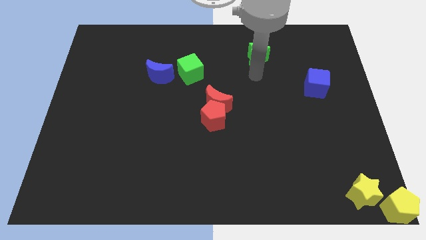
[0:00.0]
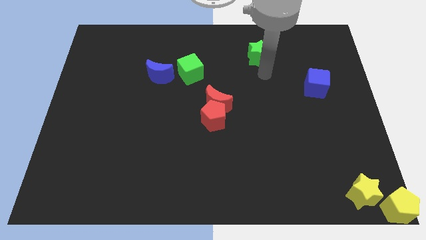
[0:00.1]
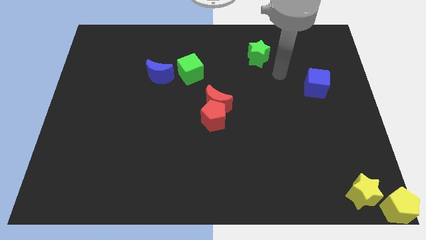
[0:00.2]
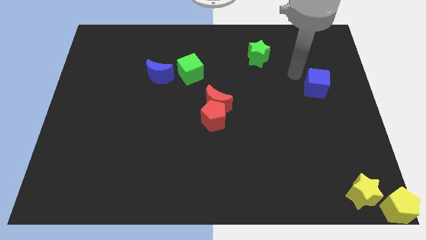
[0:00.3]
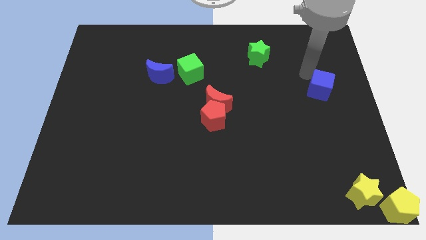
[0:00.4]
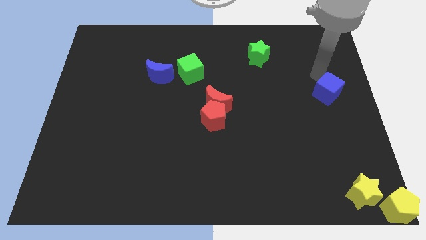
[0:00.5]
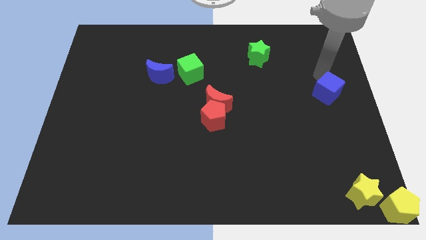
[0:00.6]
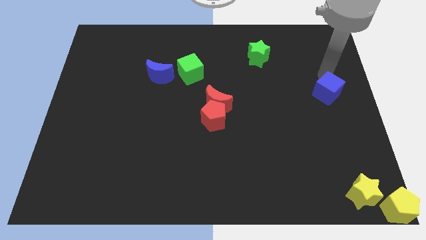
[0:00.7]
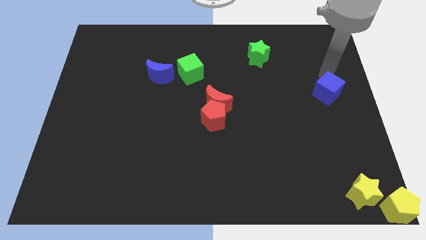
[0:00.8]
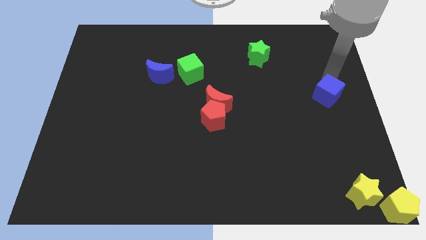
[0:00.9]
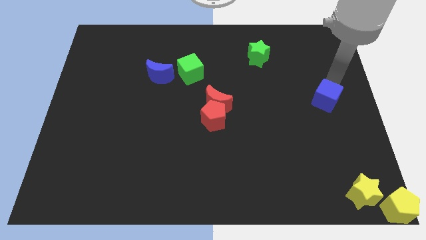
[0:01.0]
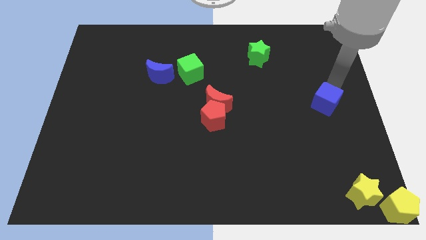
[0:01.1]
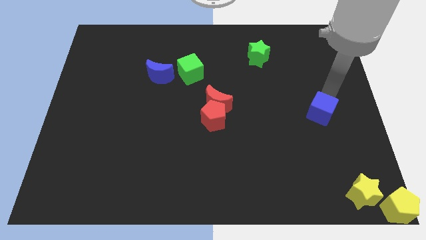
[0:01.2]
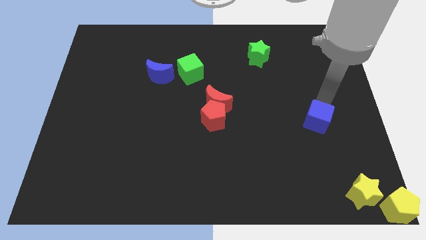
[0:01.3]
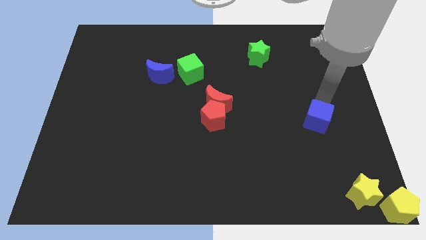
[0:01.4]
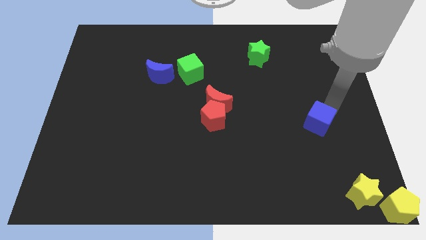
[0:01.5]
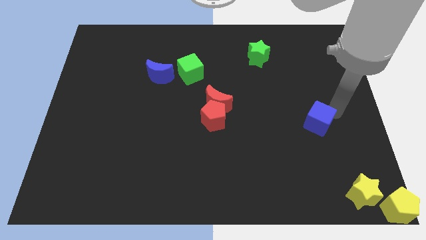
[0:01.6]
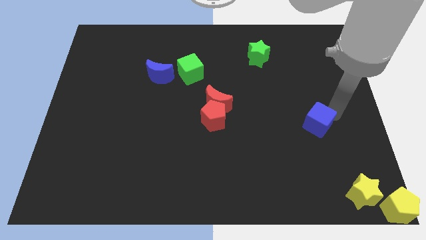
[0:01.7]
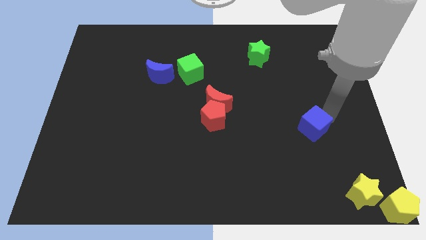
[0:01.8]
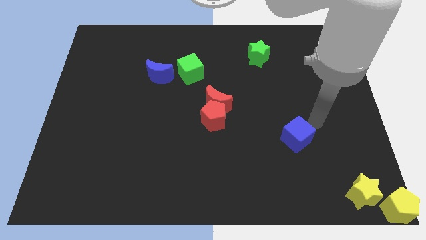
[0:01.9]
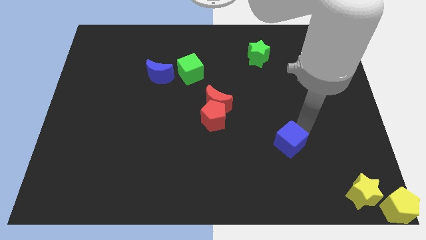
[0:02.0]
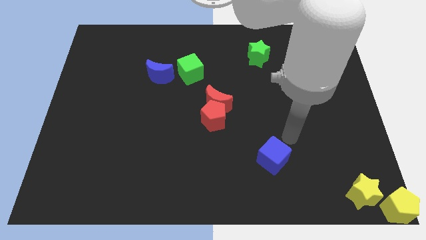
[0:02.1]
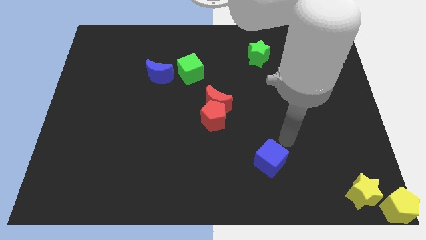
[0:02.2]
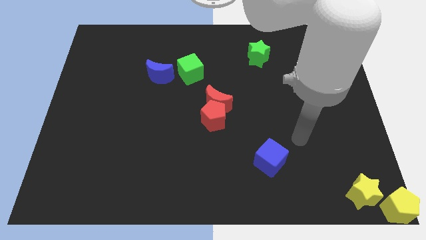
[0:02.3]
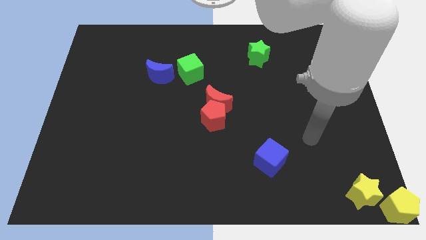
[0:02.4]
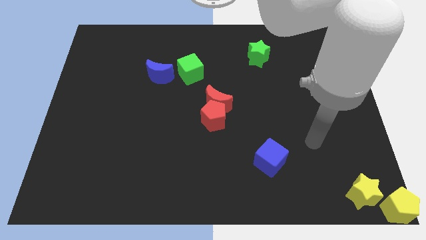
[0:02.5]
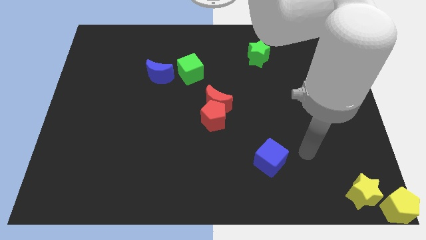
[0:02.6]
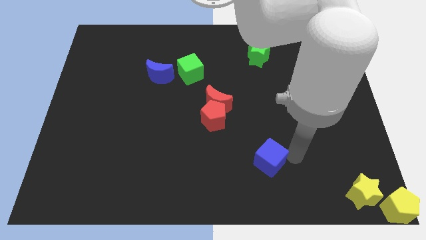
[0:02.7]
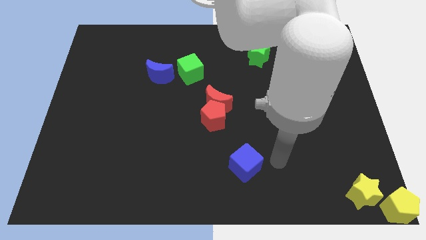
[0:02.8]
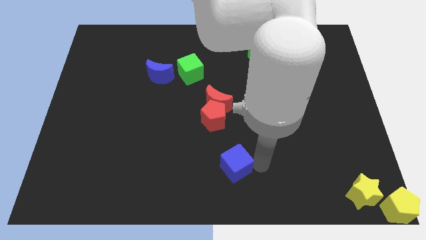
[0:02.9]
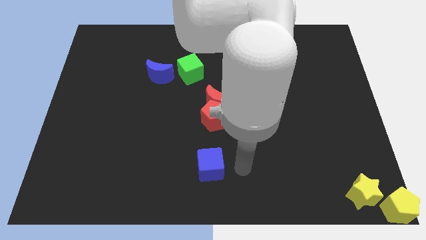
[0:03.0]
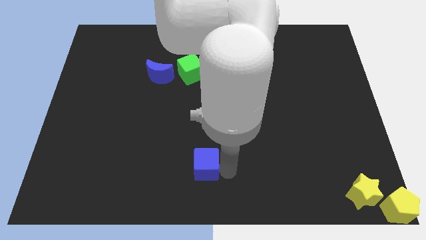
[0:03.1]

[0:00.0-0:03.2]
slide the blue cube below the red penatgon

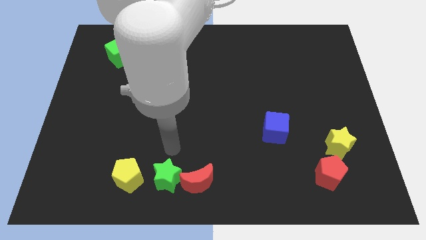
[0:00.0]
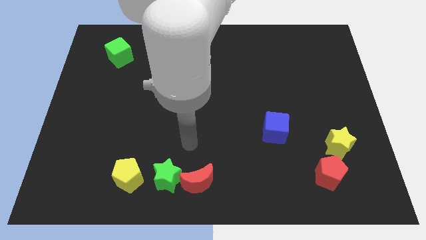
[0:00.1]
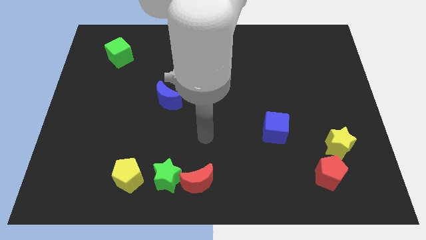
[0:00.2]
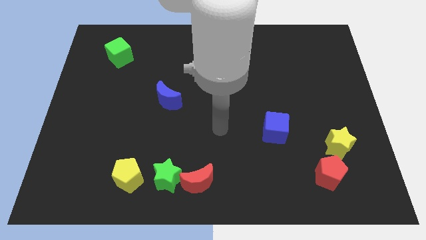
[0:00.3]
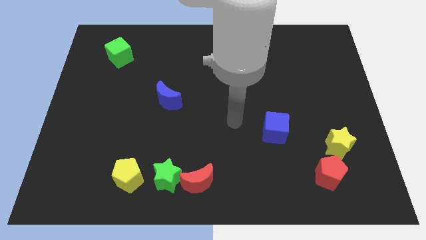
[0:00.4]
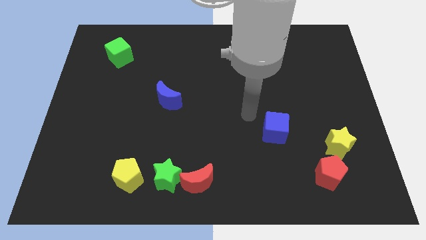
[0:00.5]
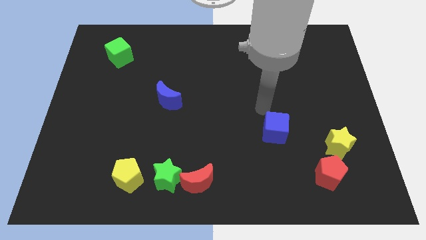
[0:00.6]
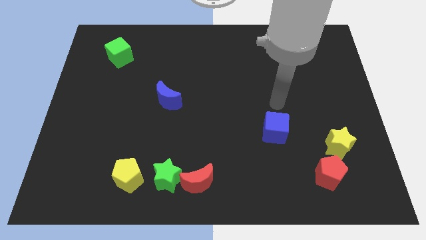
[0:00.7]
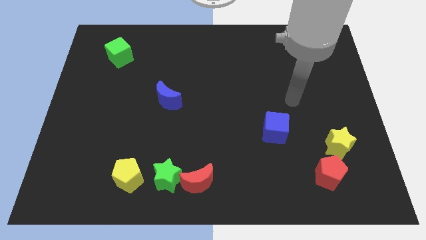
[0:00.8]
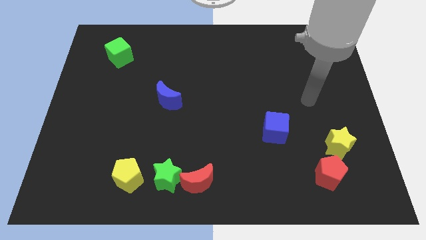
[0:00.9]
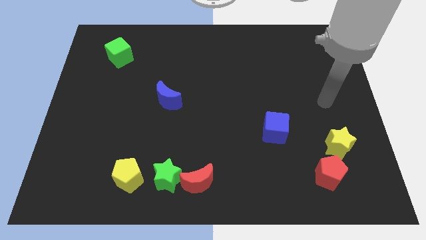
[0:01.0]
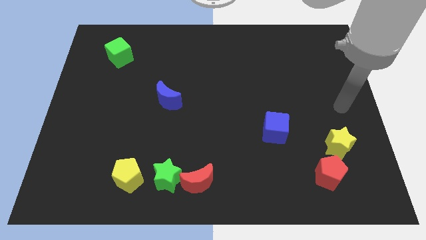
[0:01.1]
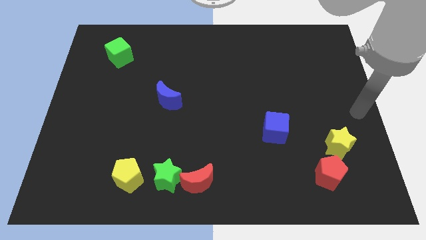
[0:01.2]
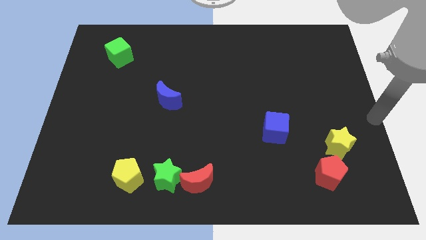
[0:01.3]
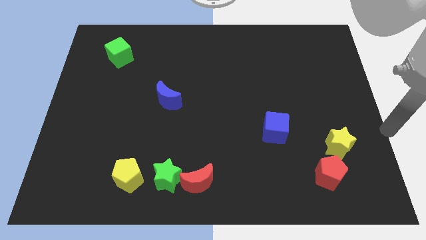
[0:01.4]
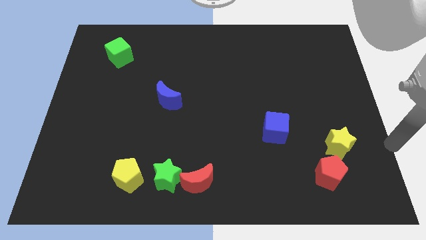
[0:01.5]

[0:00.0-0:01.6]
move your hand right to the yellow star

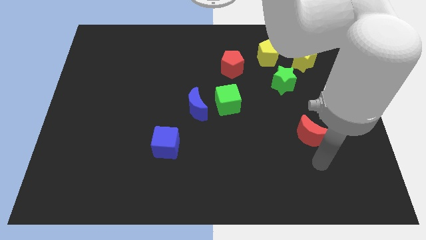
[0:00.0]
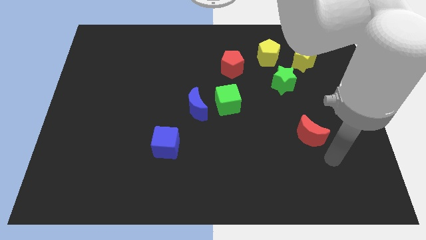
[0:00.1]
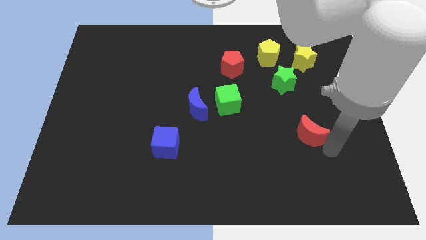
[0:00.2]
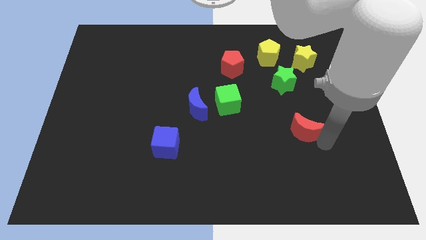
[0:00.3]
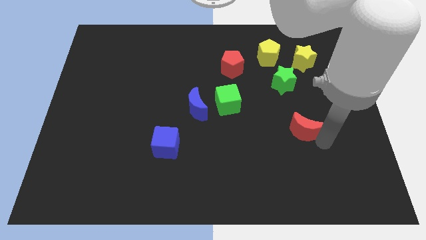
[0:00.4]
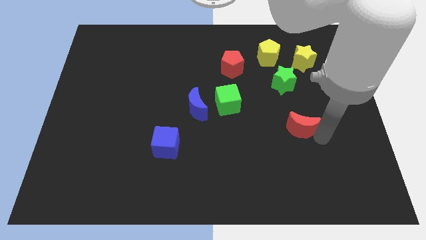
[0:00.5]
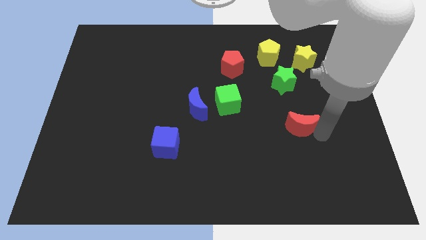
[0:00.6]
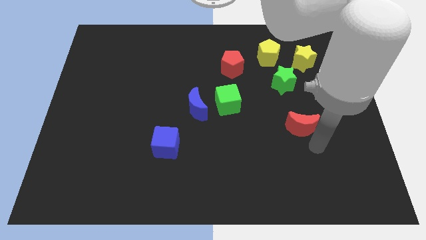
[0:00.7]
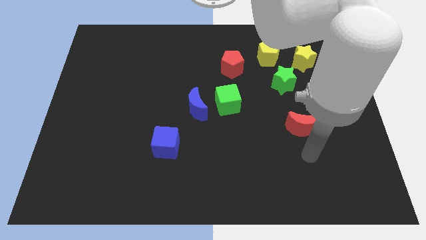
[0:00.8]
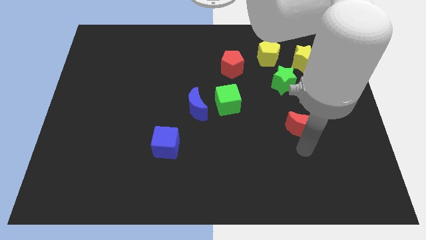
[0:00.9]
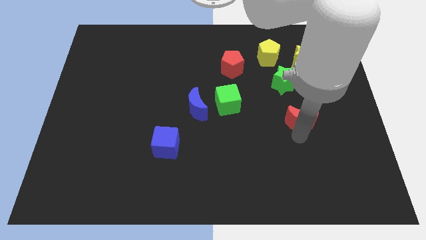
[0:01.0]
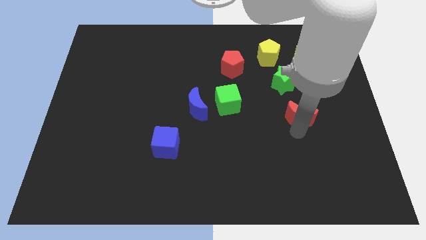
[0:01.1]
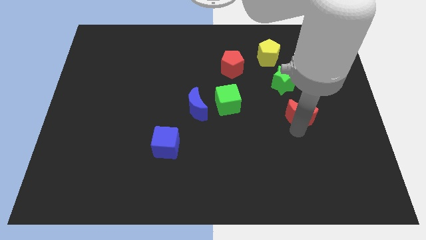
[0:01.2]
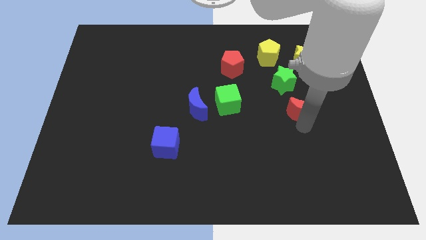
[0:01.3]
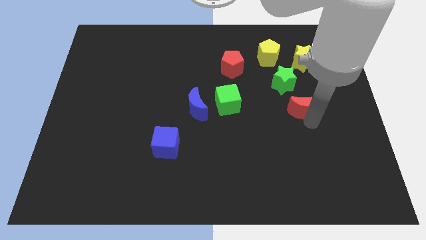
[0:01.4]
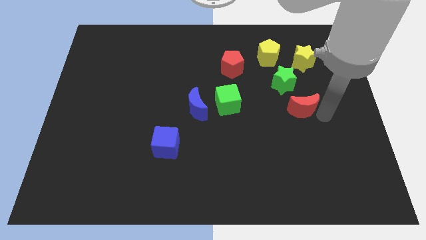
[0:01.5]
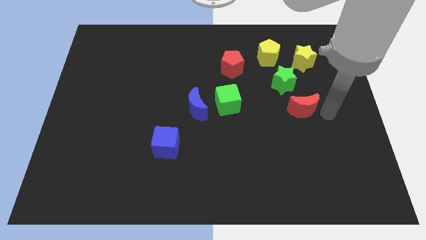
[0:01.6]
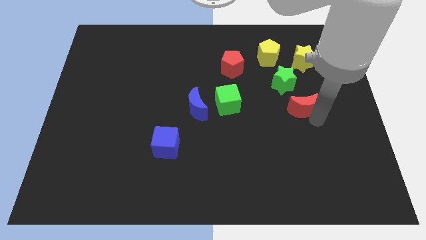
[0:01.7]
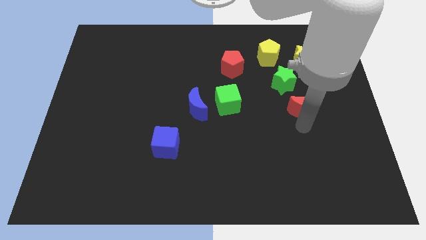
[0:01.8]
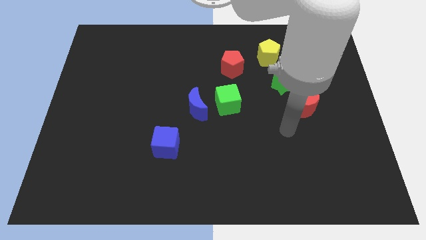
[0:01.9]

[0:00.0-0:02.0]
move the red crescent towards the green star

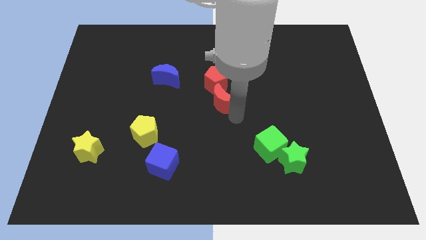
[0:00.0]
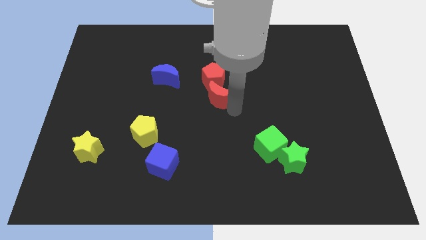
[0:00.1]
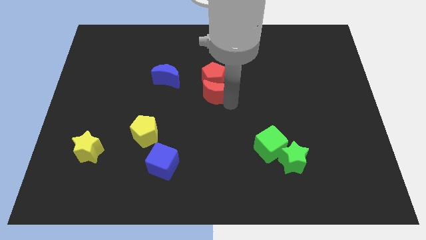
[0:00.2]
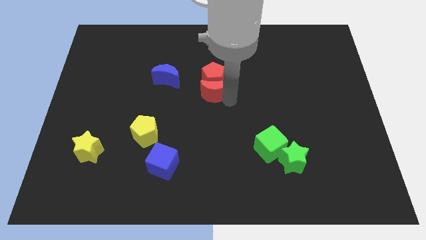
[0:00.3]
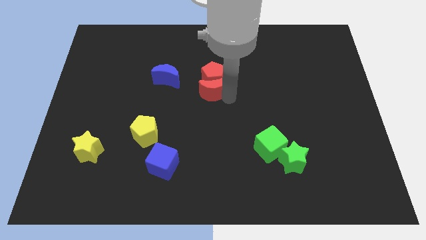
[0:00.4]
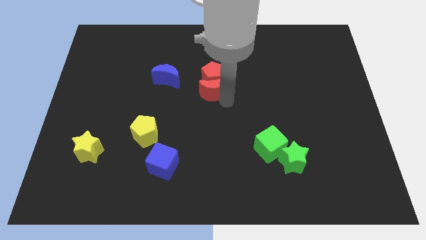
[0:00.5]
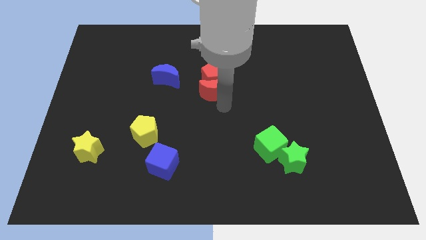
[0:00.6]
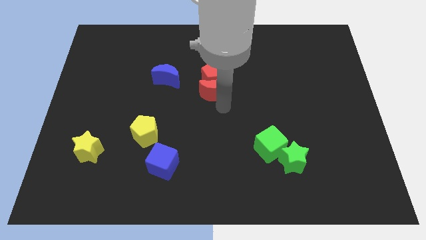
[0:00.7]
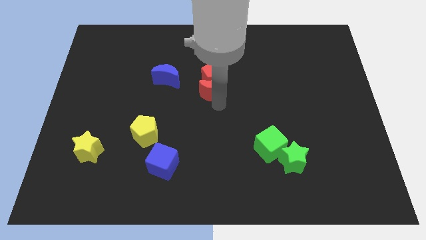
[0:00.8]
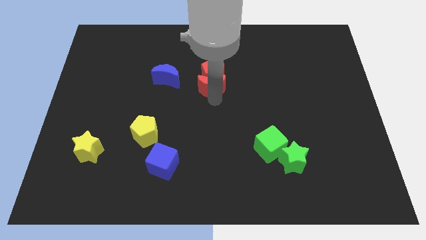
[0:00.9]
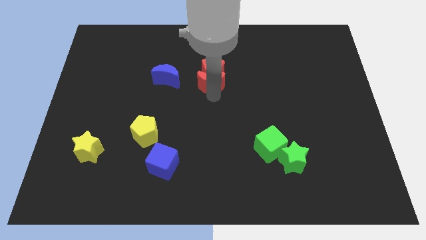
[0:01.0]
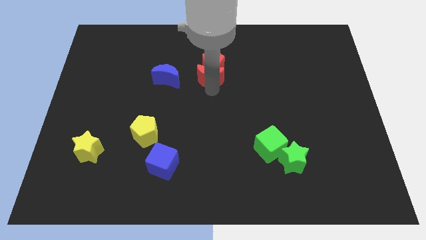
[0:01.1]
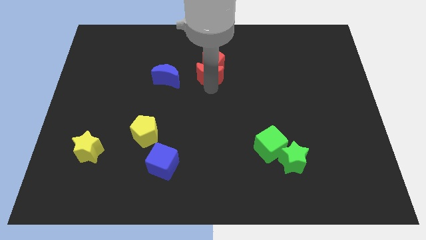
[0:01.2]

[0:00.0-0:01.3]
push the red crescent and red pentagon towards top center of the board

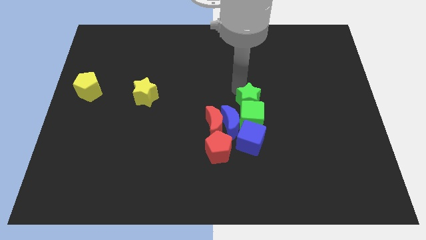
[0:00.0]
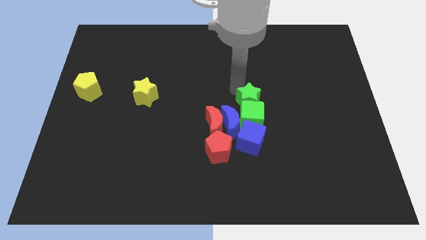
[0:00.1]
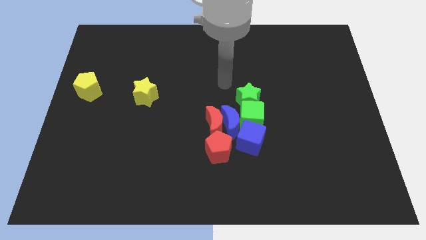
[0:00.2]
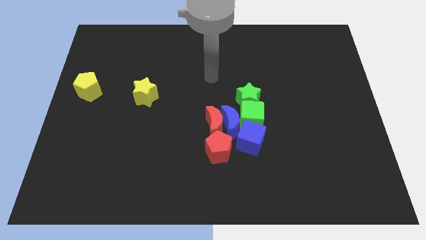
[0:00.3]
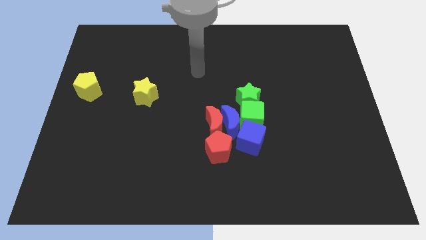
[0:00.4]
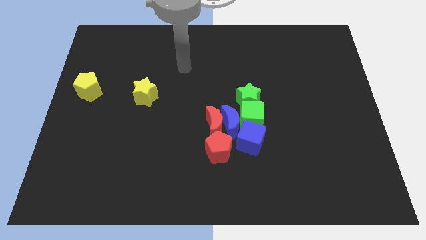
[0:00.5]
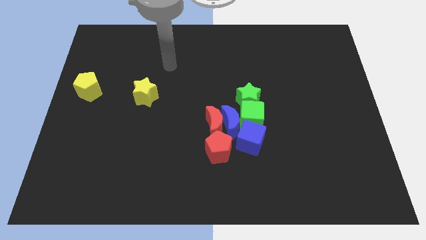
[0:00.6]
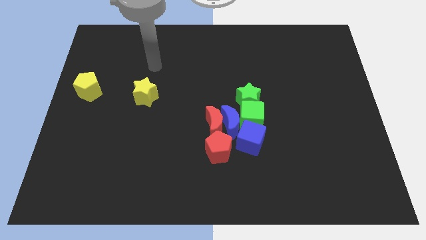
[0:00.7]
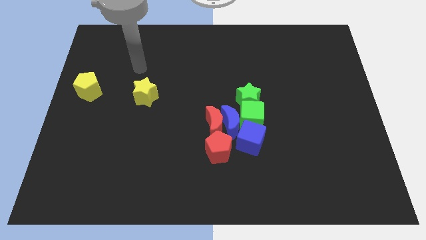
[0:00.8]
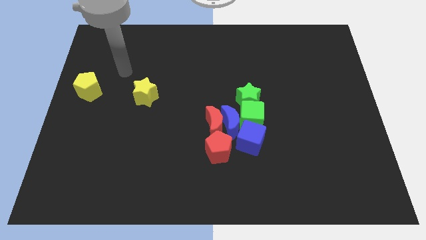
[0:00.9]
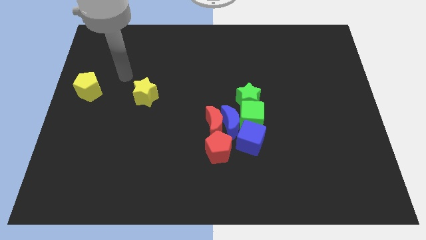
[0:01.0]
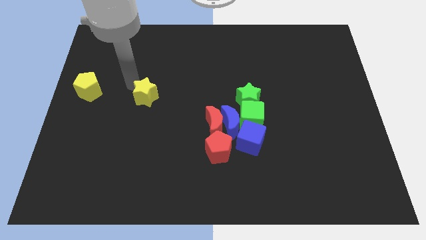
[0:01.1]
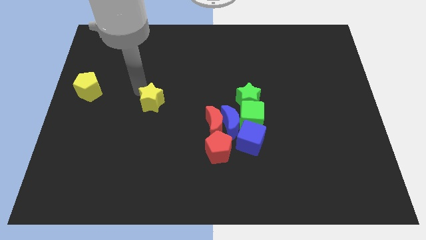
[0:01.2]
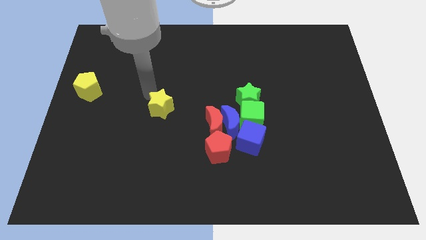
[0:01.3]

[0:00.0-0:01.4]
move your arm into the yellow star
